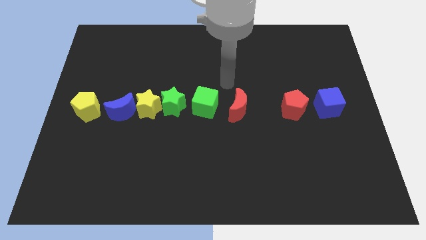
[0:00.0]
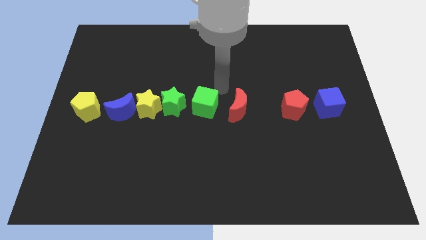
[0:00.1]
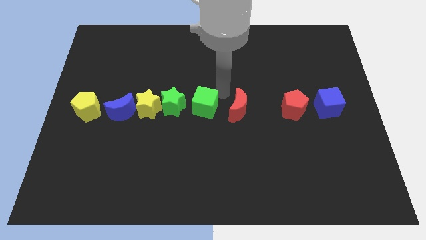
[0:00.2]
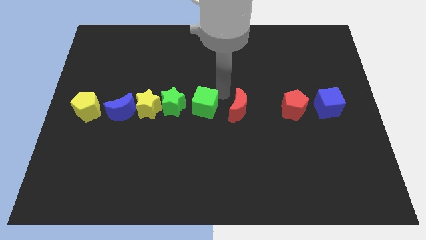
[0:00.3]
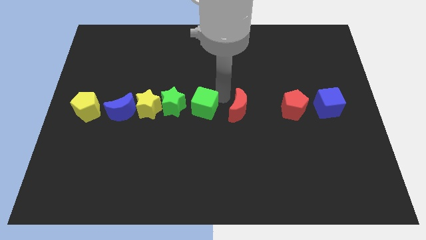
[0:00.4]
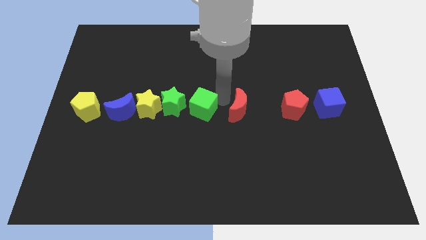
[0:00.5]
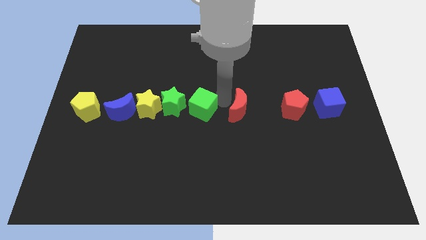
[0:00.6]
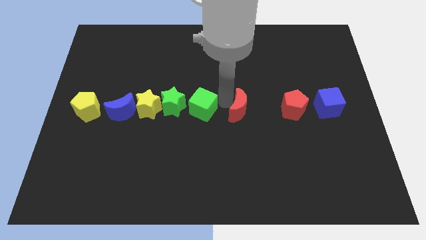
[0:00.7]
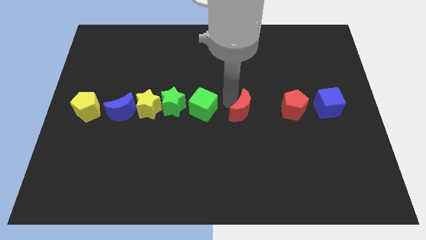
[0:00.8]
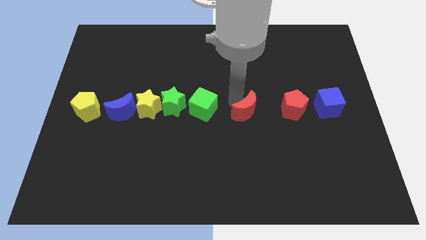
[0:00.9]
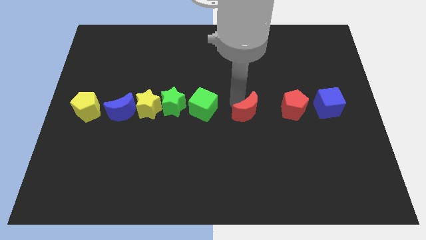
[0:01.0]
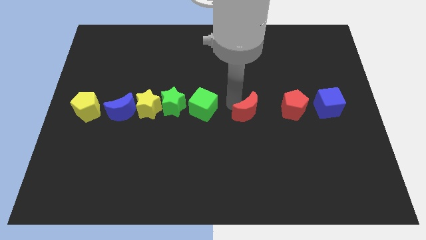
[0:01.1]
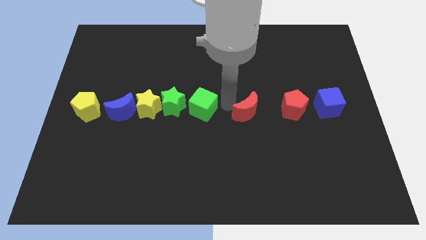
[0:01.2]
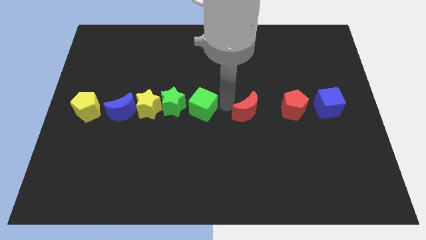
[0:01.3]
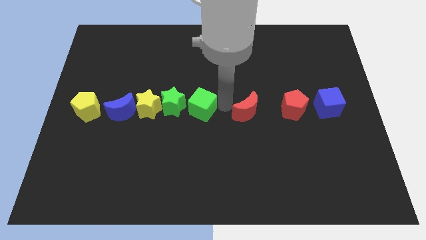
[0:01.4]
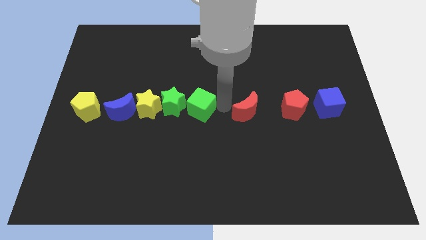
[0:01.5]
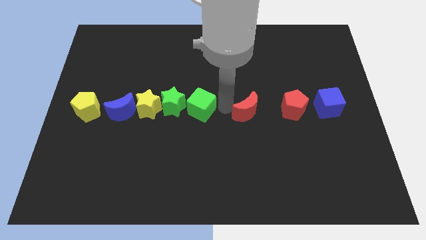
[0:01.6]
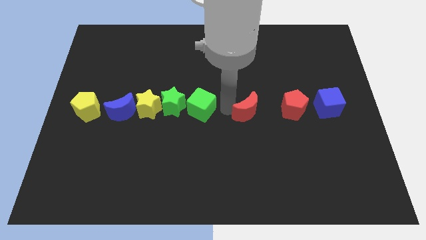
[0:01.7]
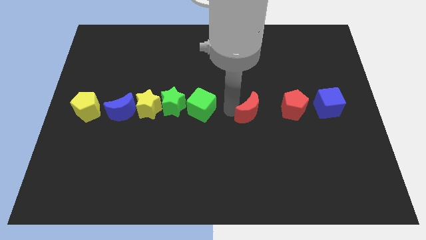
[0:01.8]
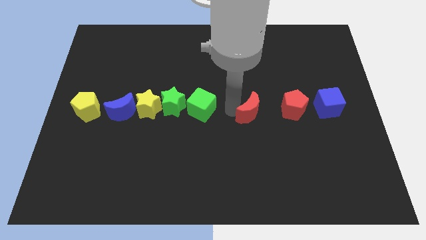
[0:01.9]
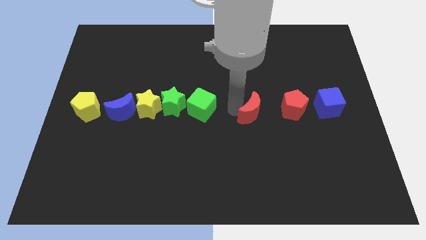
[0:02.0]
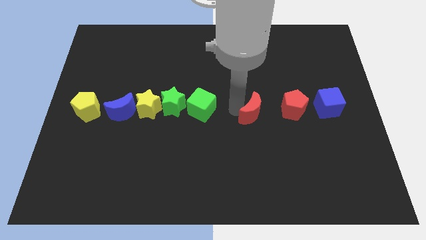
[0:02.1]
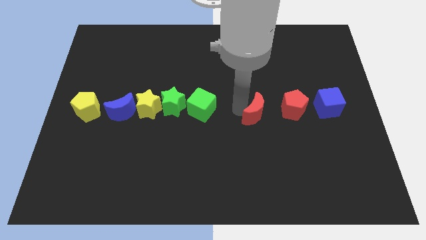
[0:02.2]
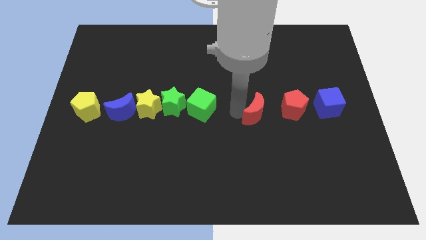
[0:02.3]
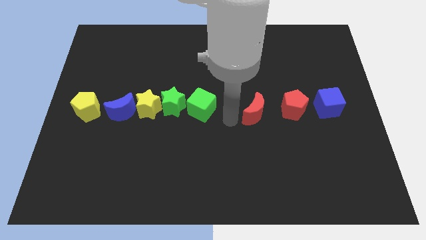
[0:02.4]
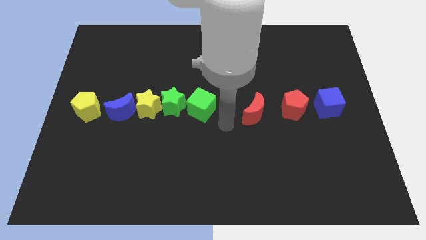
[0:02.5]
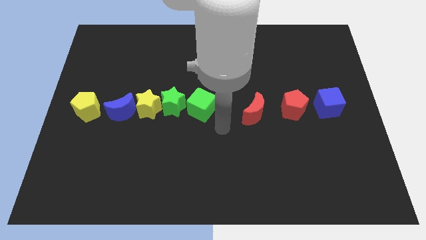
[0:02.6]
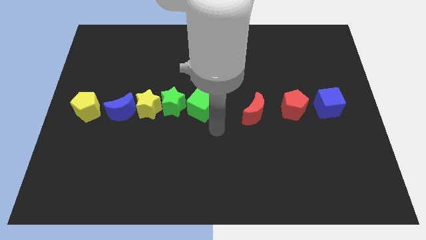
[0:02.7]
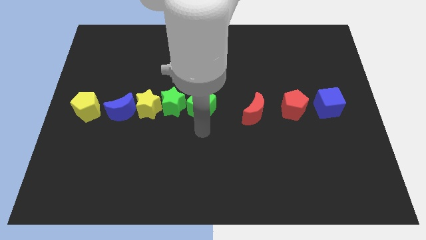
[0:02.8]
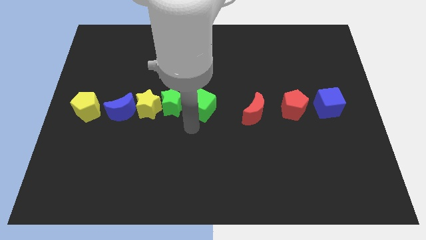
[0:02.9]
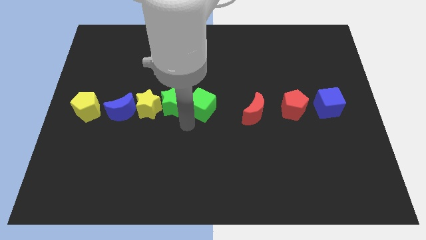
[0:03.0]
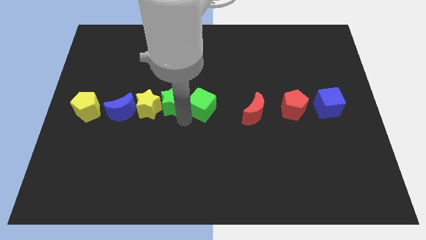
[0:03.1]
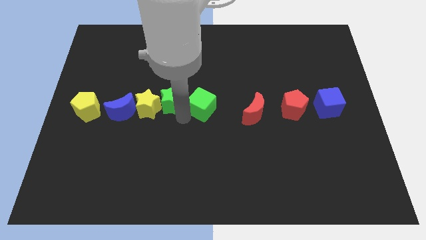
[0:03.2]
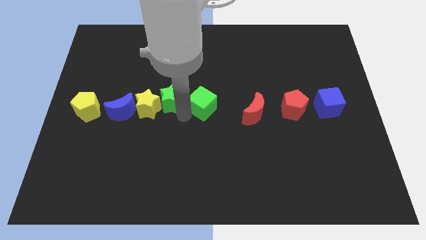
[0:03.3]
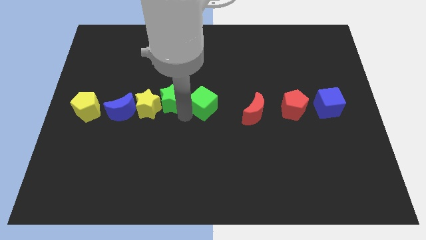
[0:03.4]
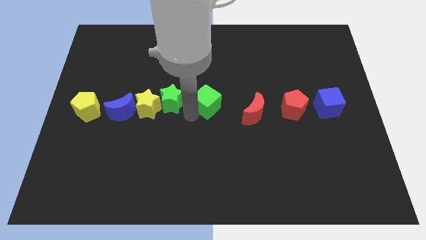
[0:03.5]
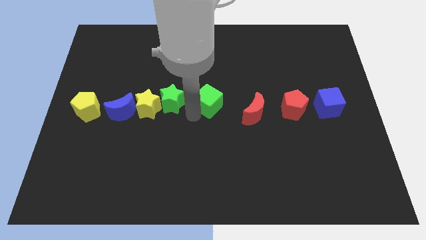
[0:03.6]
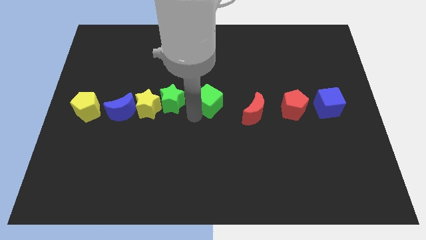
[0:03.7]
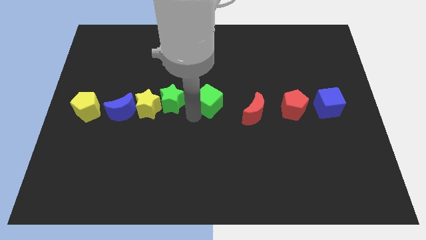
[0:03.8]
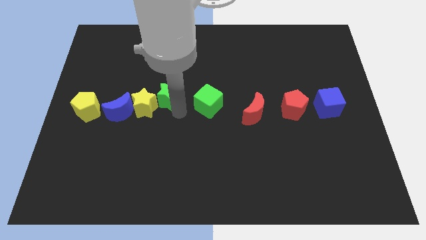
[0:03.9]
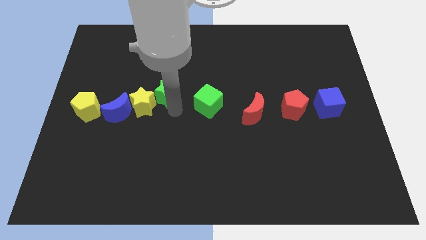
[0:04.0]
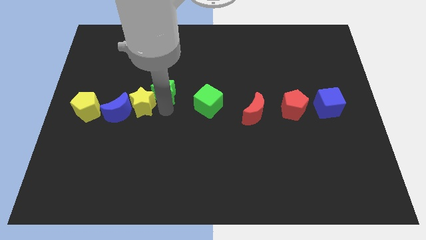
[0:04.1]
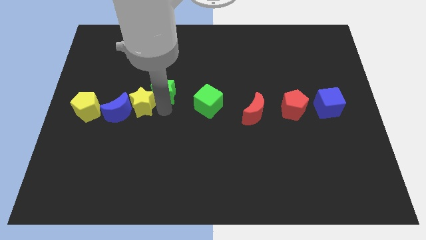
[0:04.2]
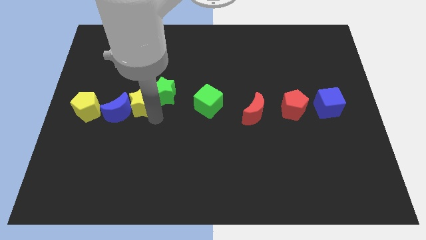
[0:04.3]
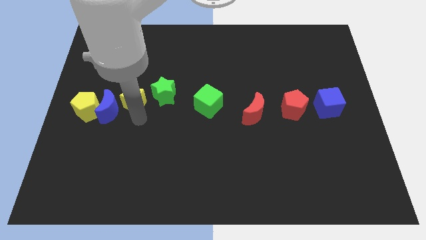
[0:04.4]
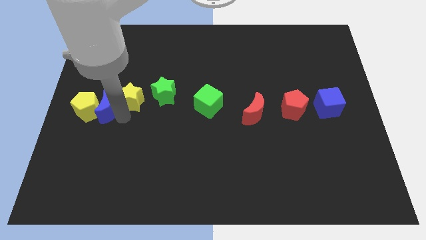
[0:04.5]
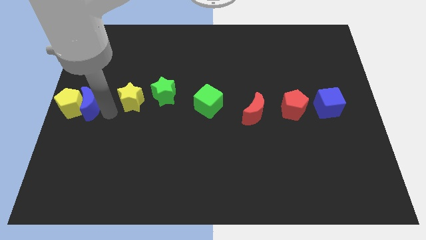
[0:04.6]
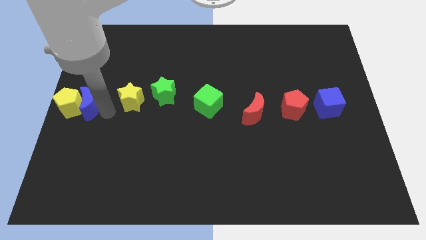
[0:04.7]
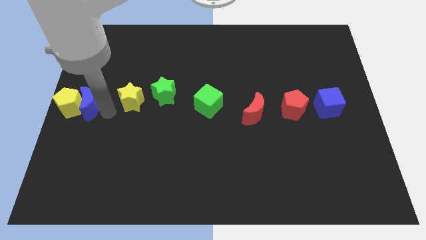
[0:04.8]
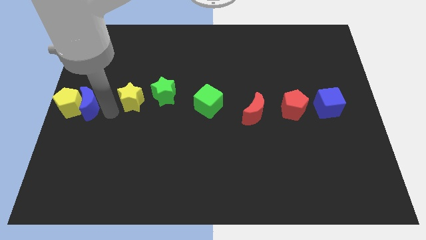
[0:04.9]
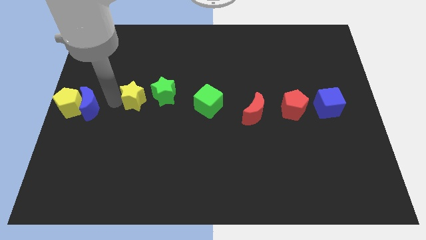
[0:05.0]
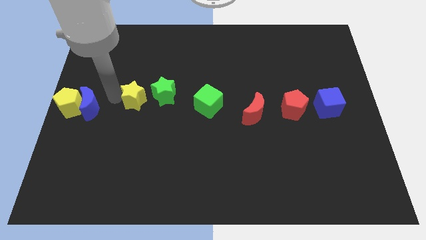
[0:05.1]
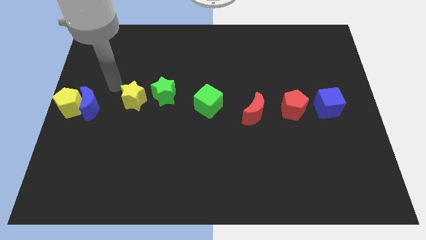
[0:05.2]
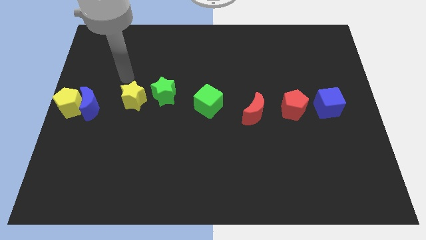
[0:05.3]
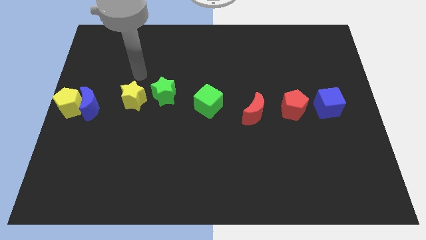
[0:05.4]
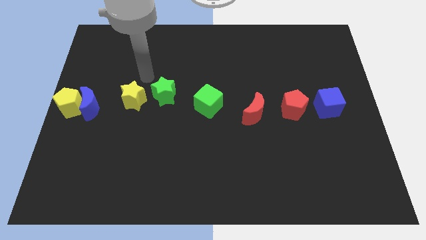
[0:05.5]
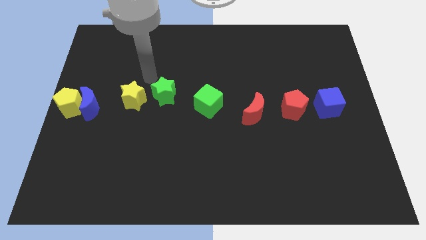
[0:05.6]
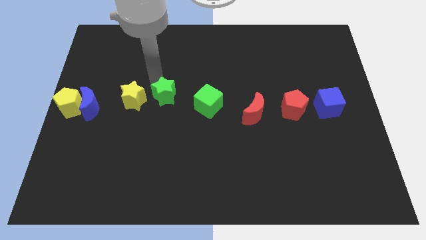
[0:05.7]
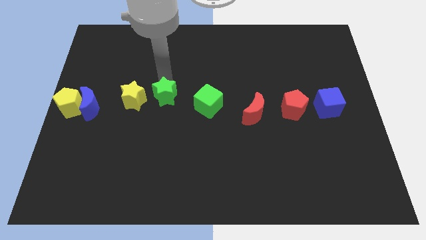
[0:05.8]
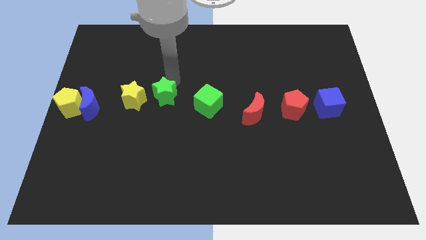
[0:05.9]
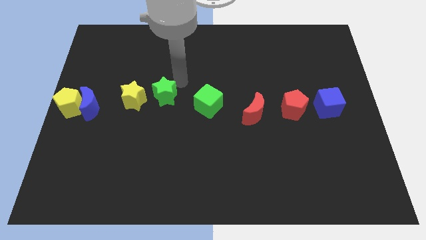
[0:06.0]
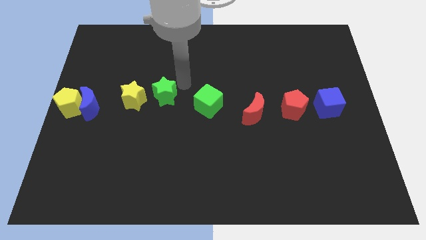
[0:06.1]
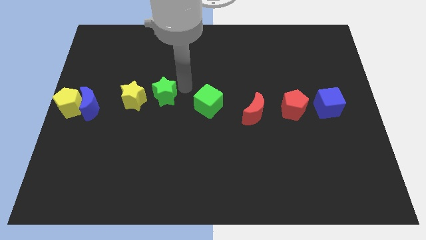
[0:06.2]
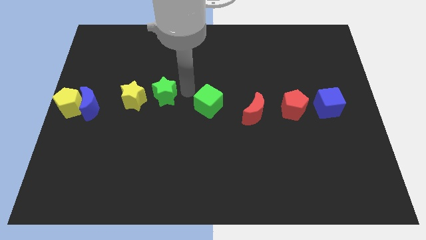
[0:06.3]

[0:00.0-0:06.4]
arrange the group of blocks properly in a line

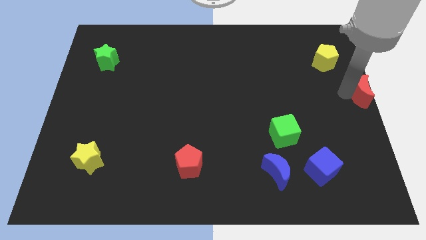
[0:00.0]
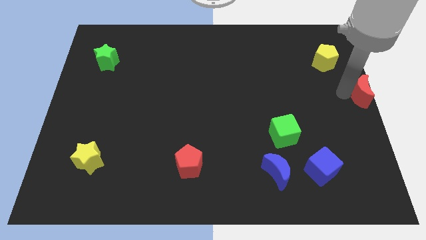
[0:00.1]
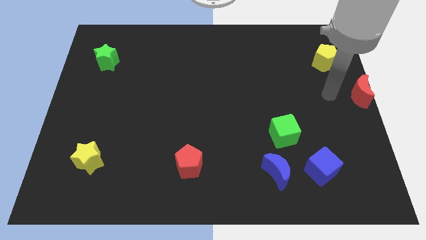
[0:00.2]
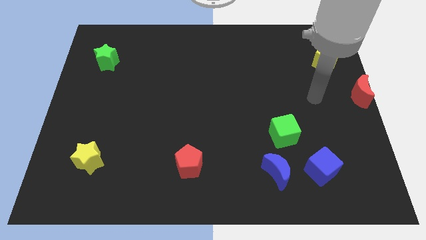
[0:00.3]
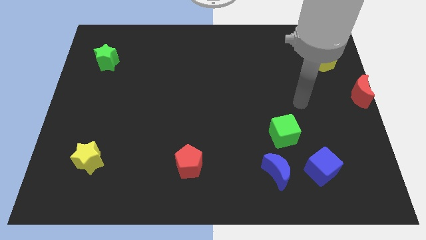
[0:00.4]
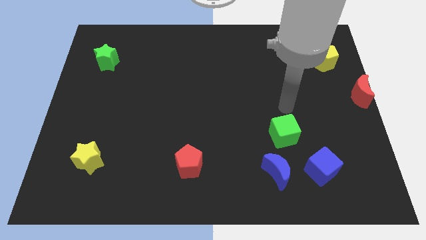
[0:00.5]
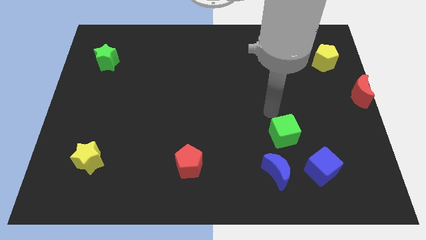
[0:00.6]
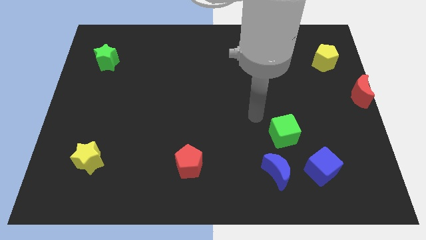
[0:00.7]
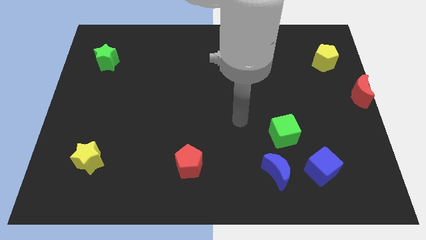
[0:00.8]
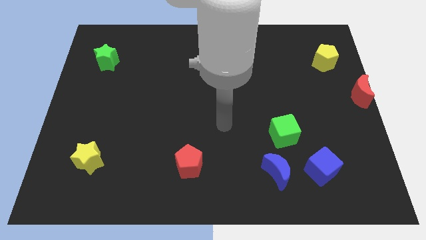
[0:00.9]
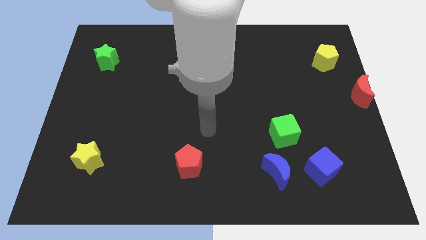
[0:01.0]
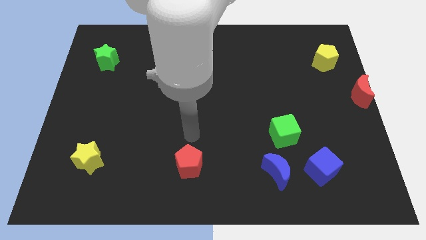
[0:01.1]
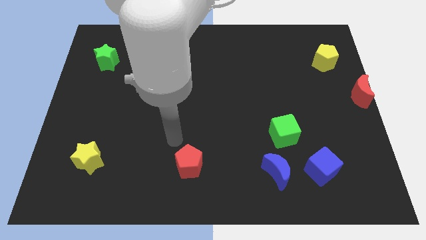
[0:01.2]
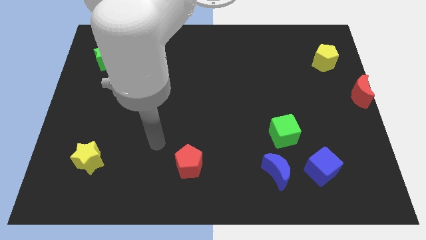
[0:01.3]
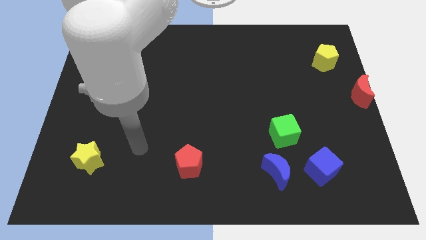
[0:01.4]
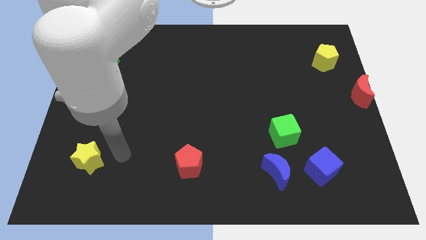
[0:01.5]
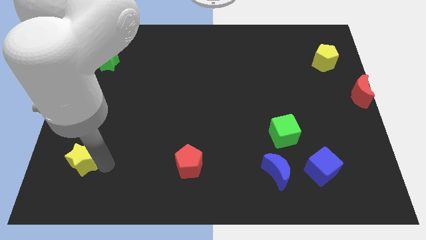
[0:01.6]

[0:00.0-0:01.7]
point your hand at the right side of the yellow star

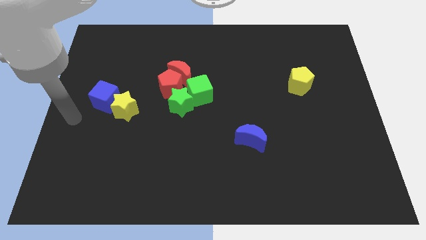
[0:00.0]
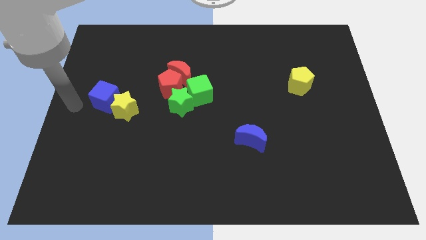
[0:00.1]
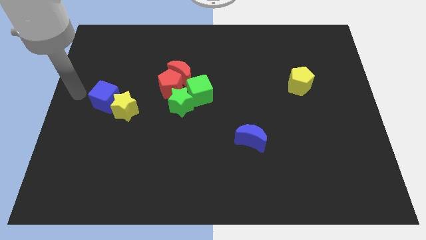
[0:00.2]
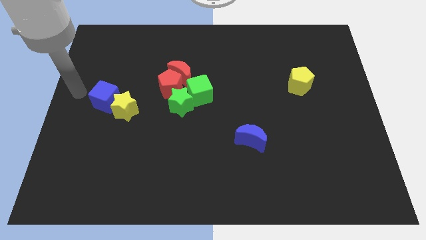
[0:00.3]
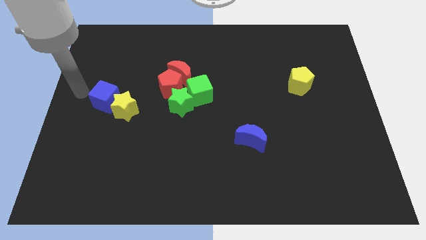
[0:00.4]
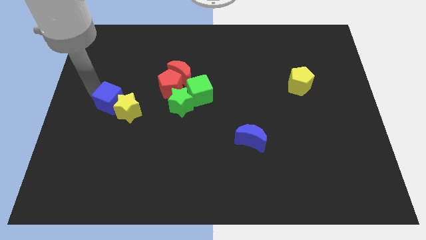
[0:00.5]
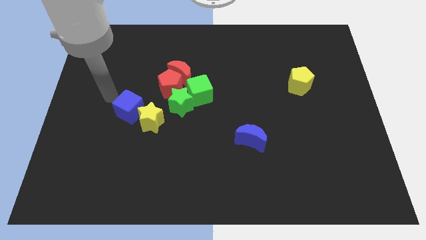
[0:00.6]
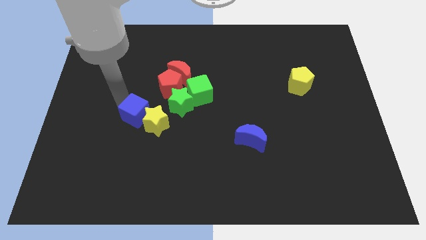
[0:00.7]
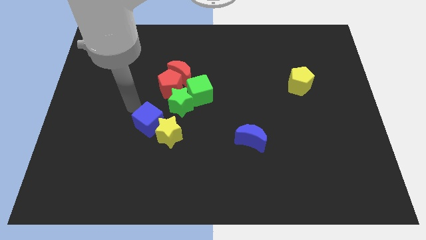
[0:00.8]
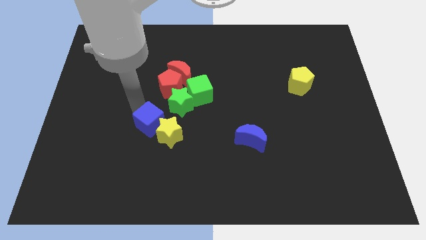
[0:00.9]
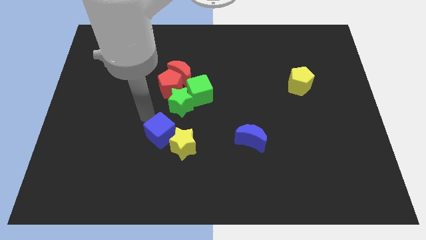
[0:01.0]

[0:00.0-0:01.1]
push the blue cube and yellow star below the group of blocks
